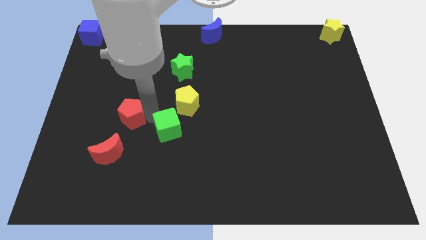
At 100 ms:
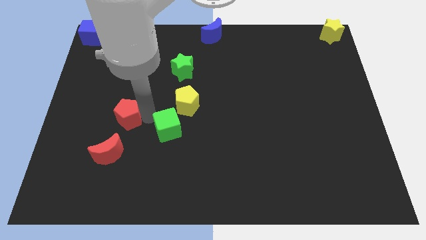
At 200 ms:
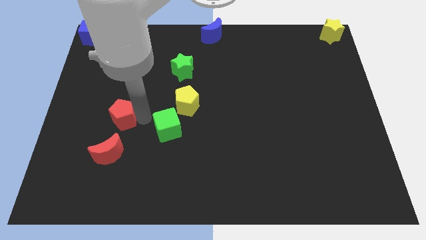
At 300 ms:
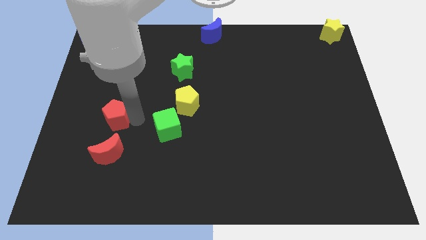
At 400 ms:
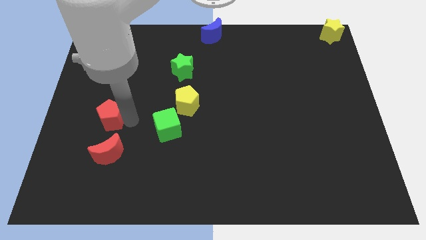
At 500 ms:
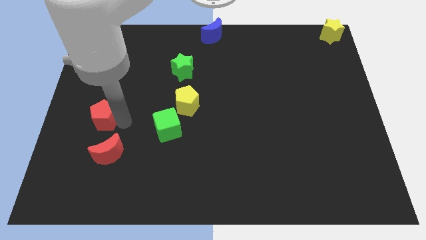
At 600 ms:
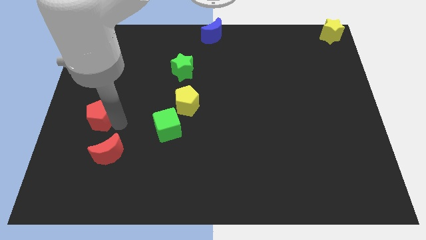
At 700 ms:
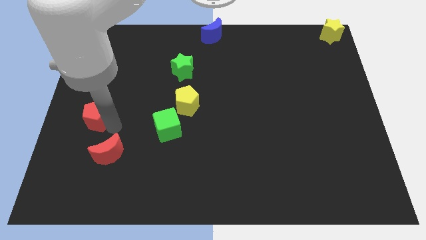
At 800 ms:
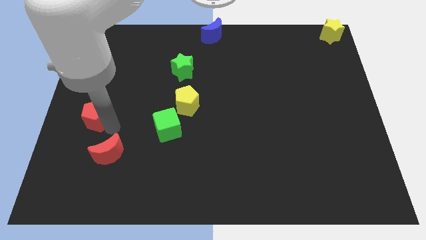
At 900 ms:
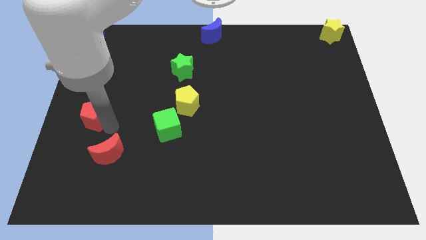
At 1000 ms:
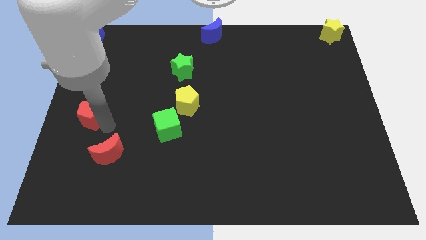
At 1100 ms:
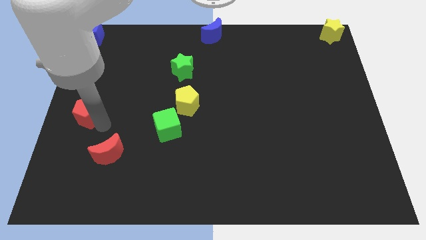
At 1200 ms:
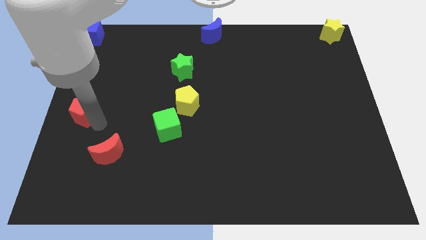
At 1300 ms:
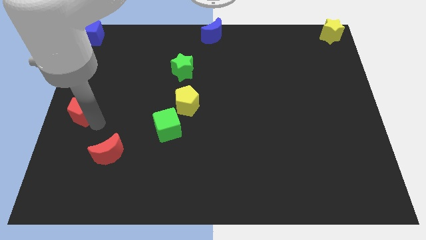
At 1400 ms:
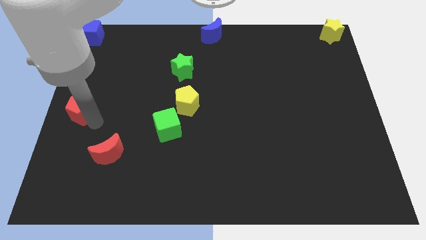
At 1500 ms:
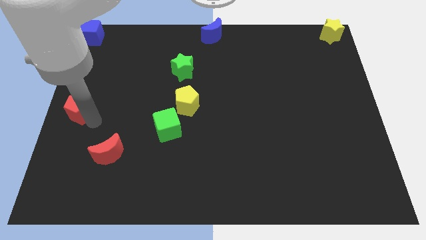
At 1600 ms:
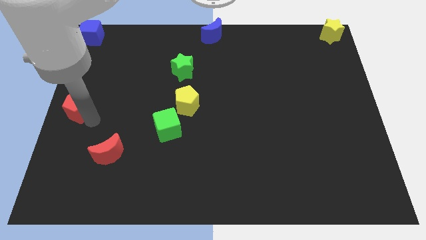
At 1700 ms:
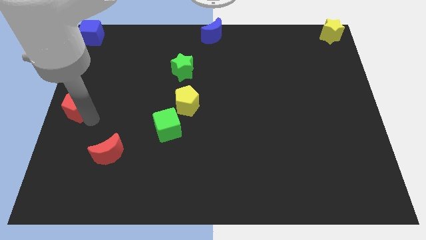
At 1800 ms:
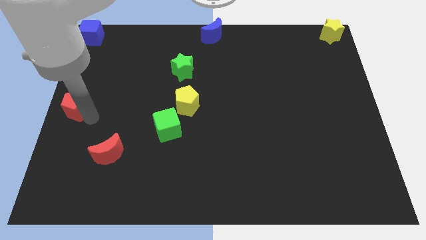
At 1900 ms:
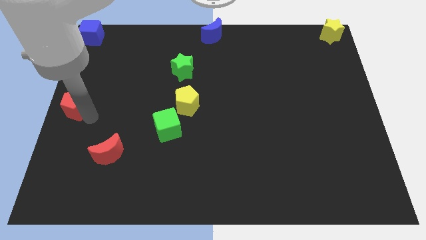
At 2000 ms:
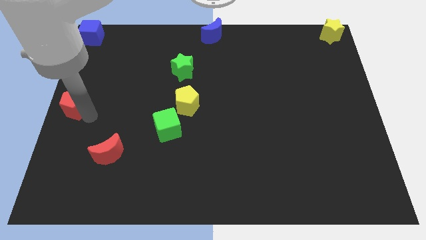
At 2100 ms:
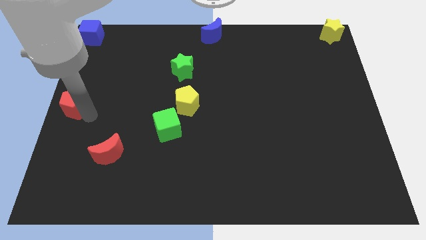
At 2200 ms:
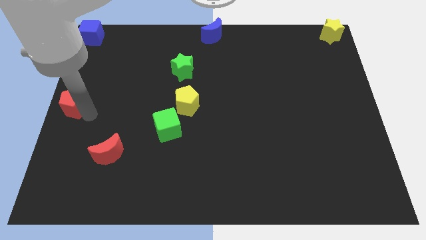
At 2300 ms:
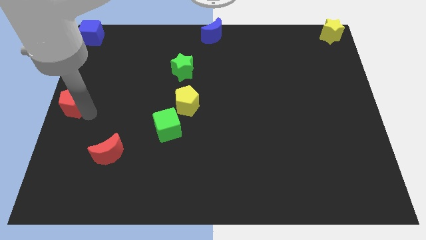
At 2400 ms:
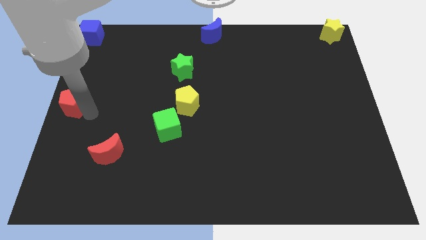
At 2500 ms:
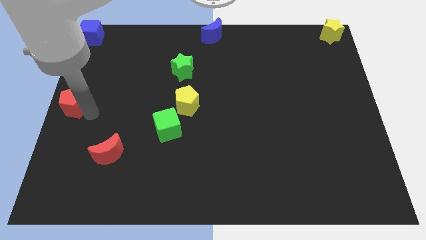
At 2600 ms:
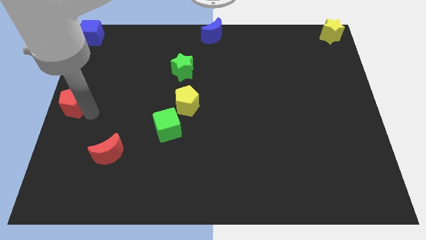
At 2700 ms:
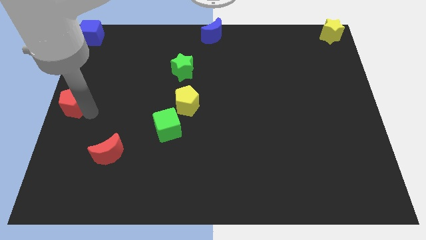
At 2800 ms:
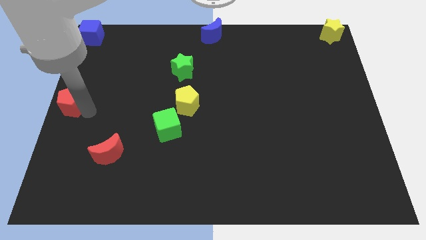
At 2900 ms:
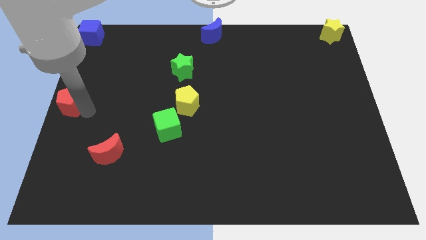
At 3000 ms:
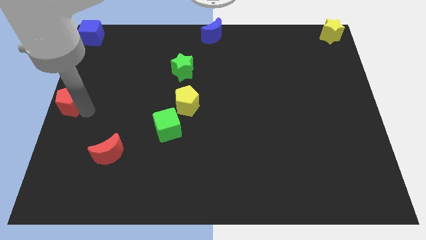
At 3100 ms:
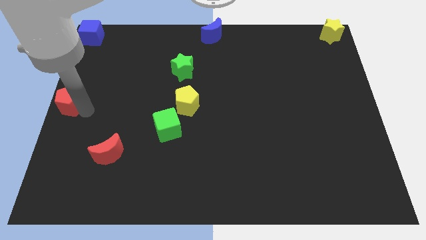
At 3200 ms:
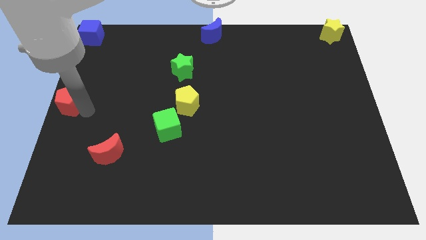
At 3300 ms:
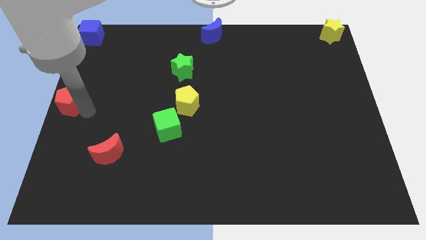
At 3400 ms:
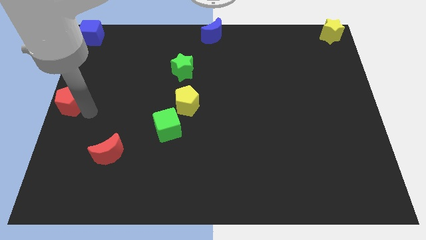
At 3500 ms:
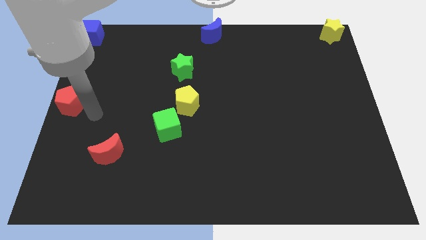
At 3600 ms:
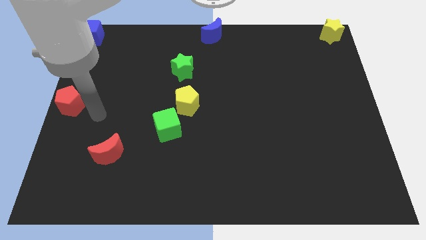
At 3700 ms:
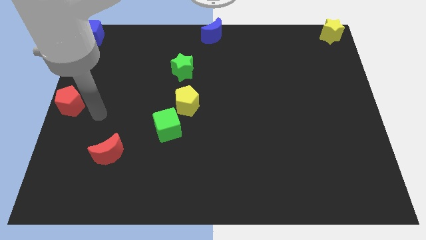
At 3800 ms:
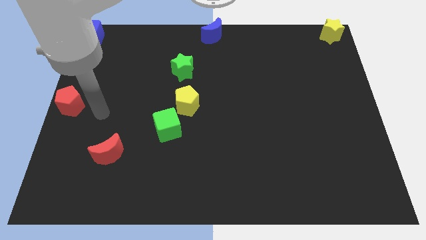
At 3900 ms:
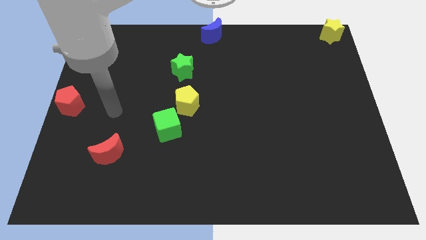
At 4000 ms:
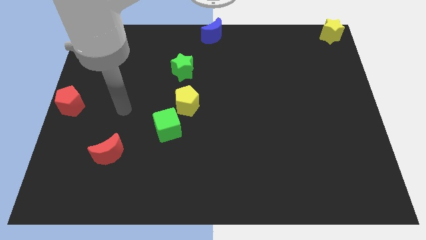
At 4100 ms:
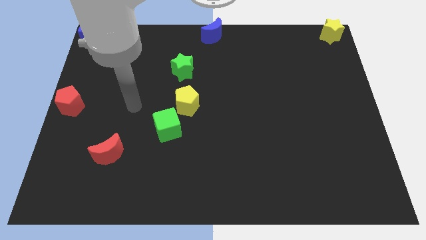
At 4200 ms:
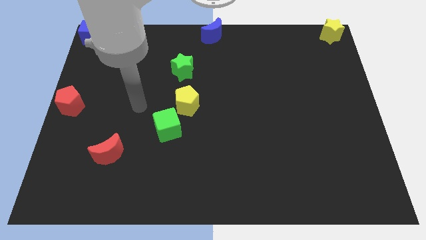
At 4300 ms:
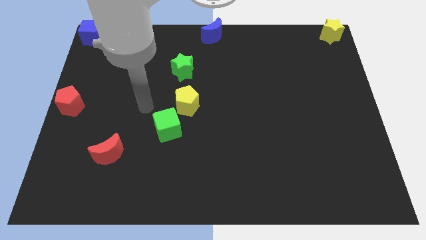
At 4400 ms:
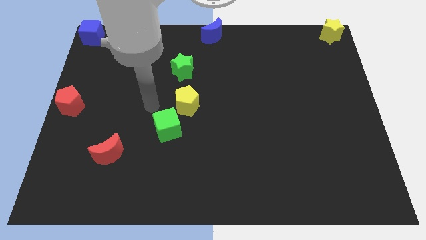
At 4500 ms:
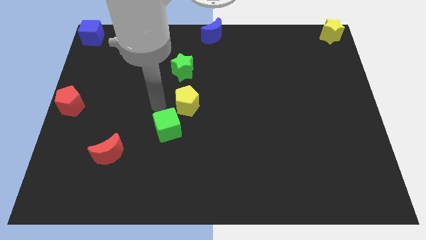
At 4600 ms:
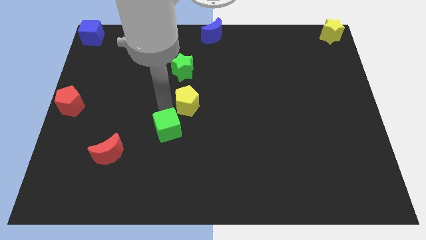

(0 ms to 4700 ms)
place the red crescent towards left centre of the board

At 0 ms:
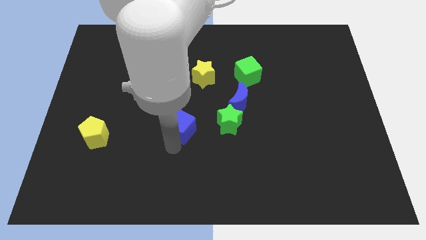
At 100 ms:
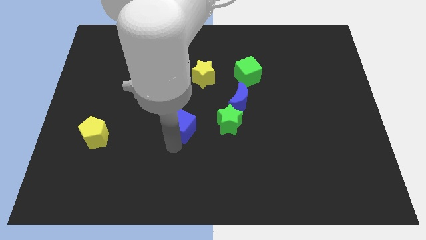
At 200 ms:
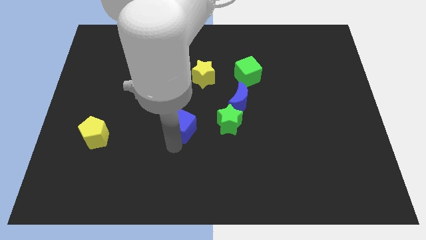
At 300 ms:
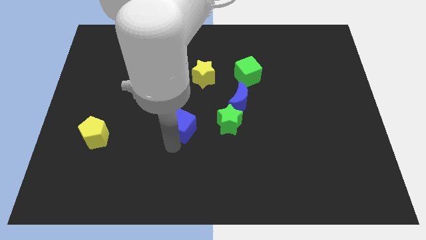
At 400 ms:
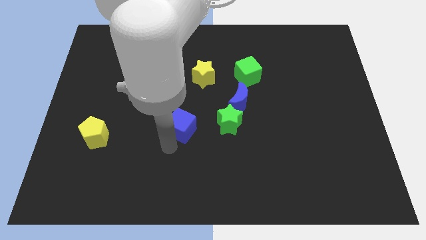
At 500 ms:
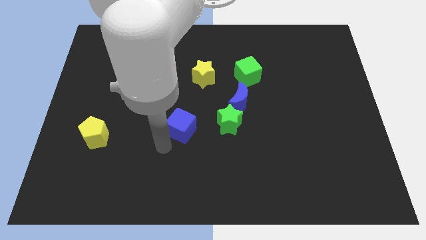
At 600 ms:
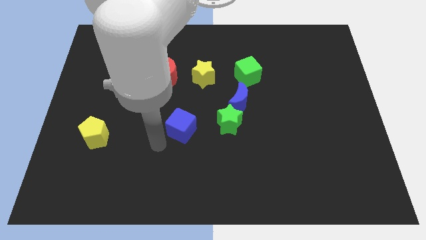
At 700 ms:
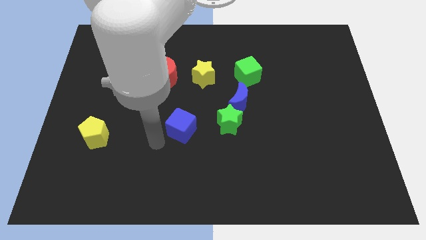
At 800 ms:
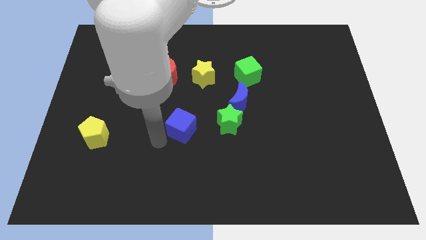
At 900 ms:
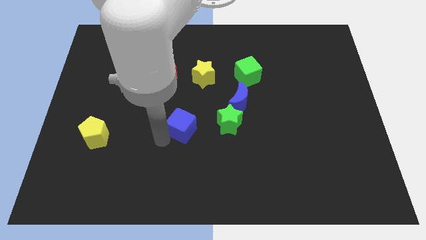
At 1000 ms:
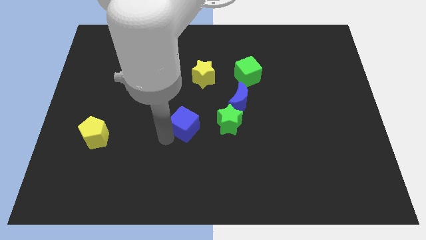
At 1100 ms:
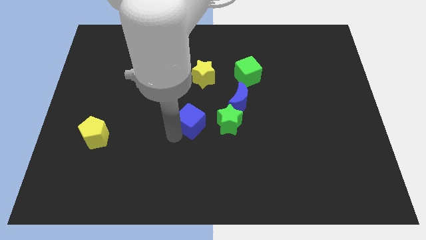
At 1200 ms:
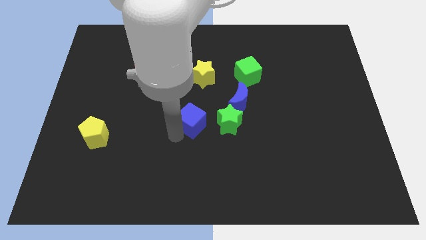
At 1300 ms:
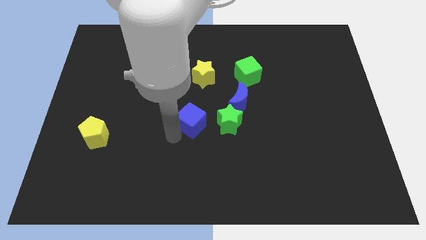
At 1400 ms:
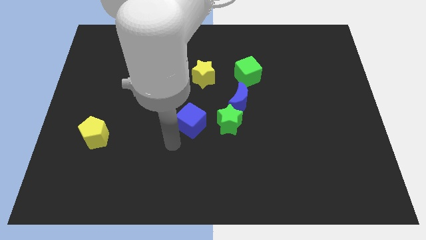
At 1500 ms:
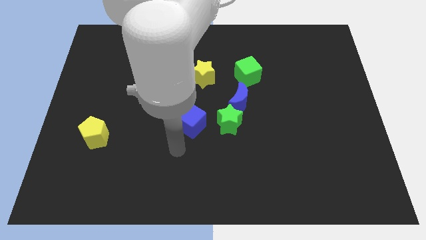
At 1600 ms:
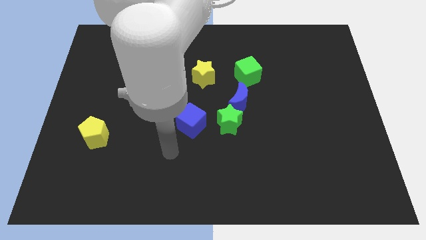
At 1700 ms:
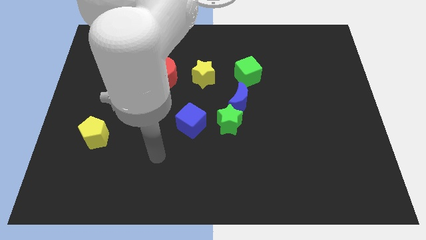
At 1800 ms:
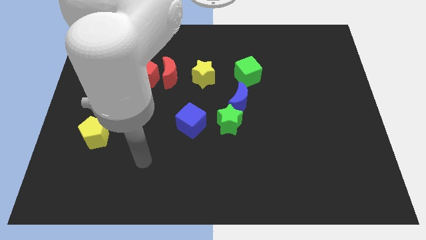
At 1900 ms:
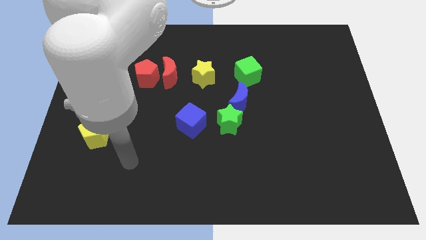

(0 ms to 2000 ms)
move the blue cube near the green star

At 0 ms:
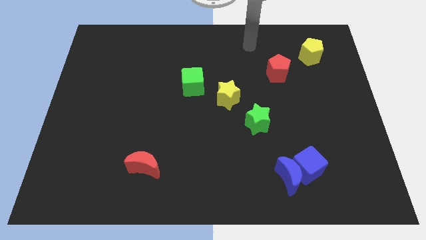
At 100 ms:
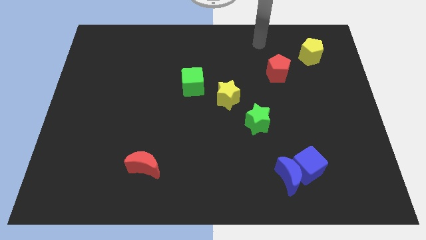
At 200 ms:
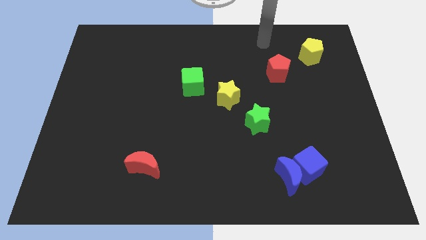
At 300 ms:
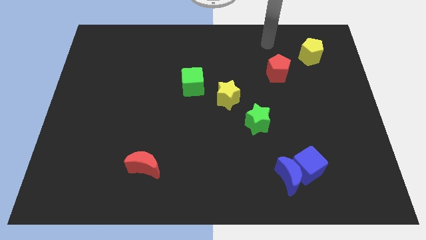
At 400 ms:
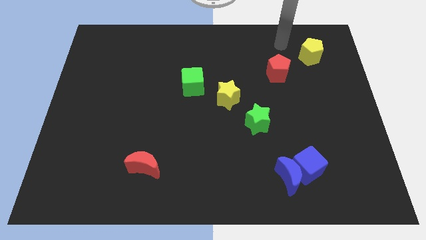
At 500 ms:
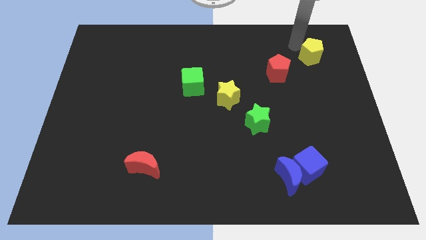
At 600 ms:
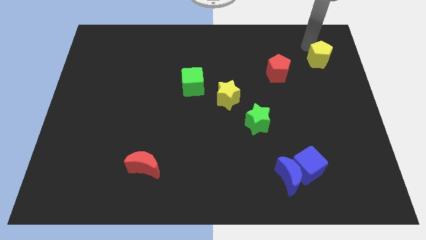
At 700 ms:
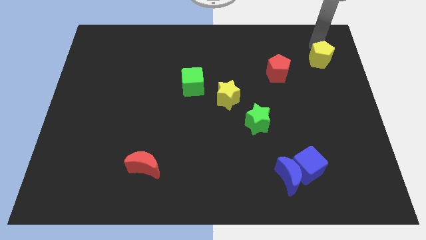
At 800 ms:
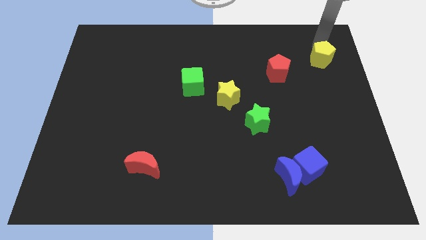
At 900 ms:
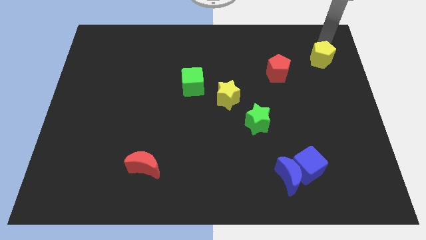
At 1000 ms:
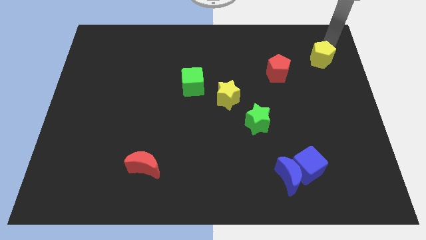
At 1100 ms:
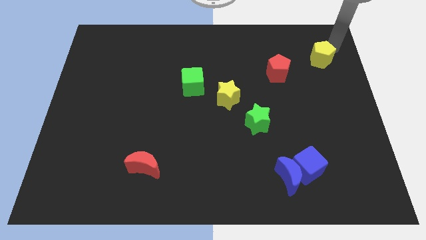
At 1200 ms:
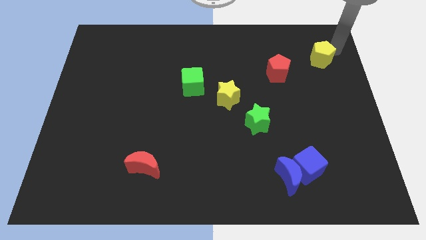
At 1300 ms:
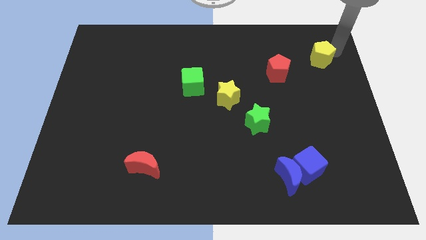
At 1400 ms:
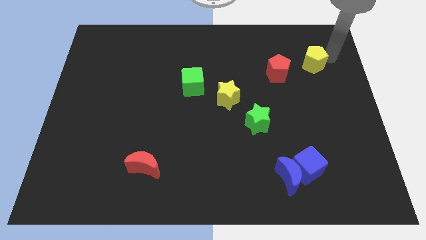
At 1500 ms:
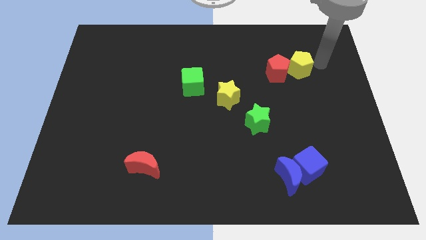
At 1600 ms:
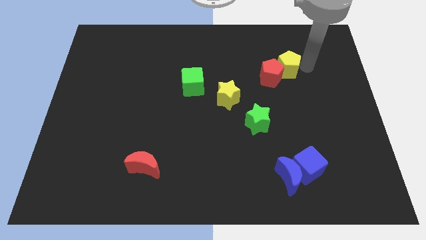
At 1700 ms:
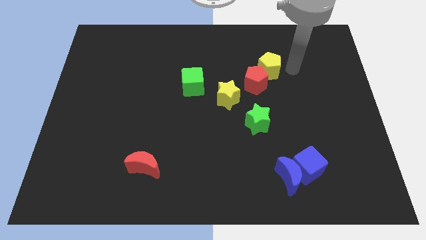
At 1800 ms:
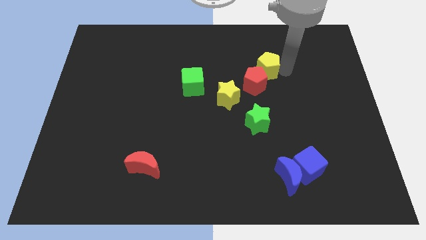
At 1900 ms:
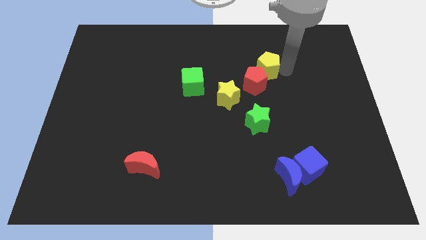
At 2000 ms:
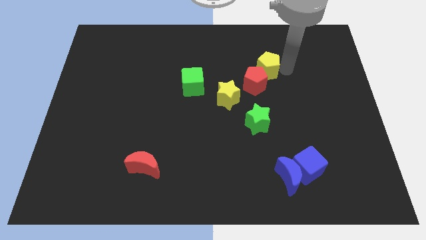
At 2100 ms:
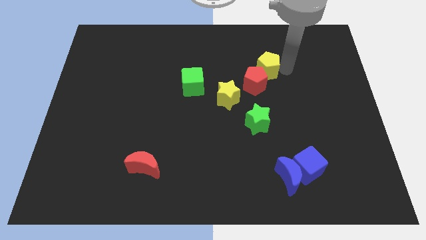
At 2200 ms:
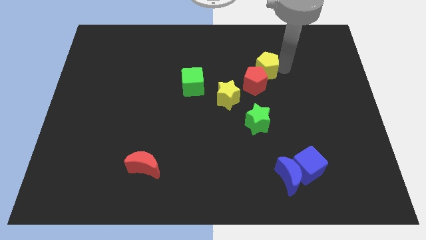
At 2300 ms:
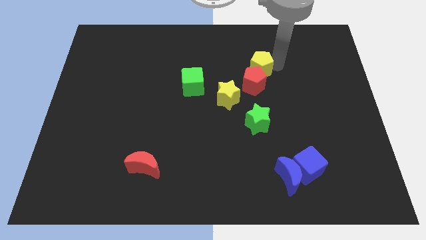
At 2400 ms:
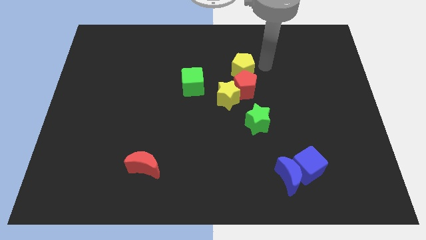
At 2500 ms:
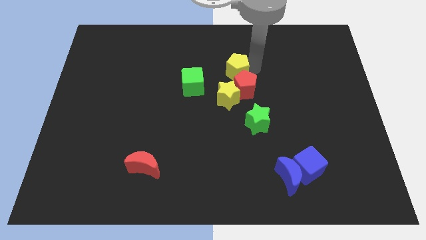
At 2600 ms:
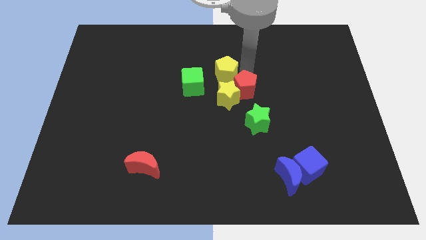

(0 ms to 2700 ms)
push the red pentagon and yellow pentagon close to yellow star
